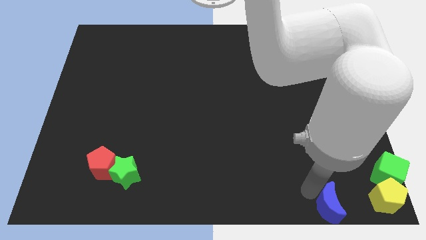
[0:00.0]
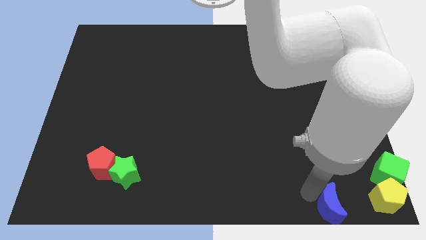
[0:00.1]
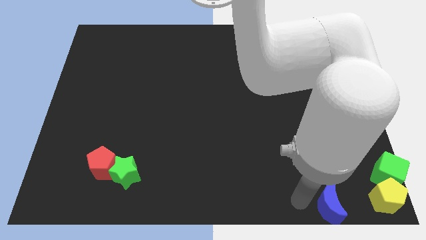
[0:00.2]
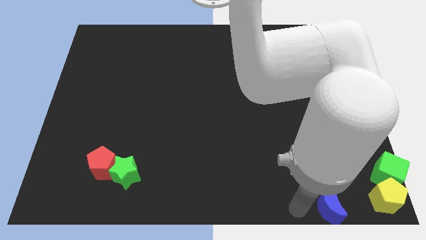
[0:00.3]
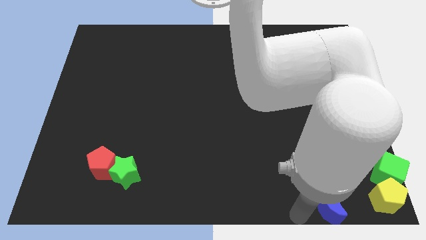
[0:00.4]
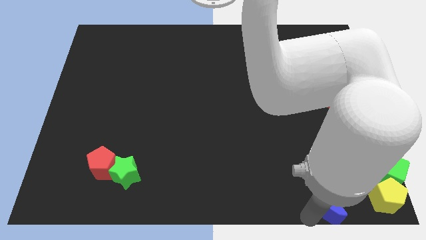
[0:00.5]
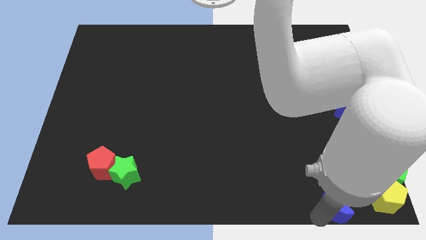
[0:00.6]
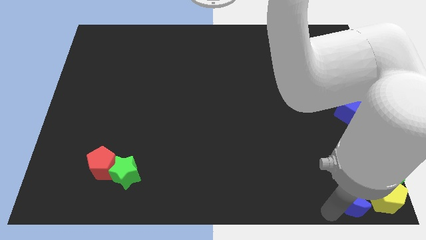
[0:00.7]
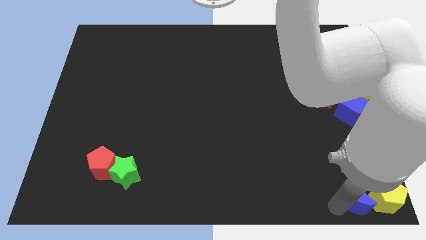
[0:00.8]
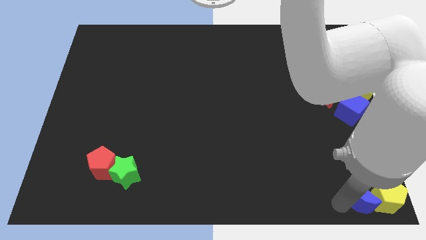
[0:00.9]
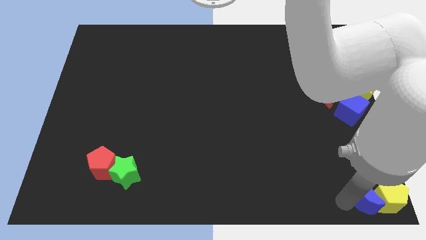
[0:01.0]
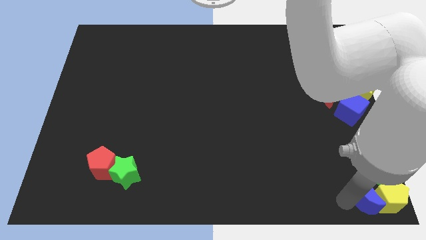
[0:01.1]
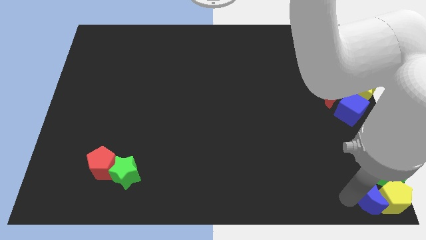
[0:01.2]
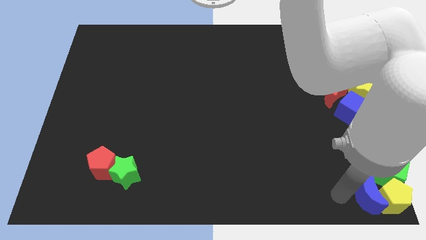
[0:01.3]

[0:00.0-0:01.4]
move the blue crescent into the yellow pentagon

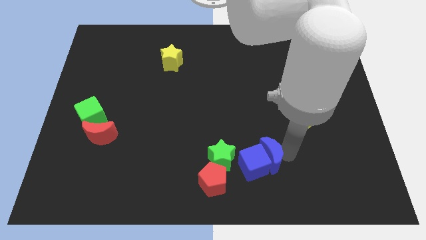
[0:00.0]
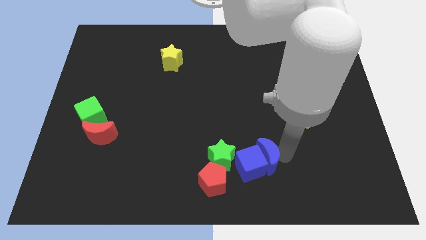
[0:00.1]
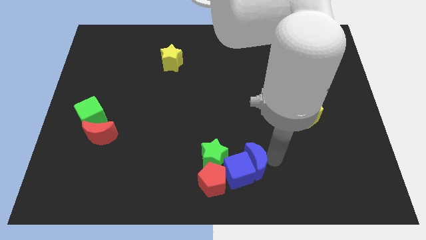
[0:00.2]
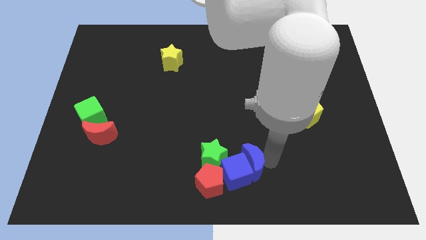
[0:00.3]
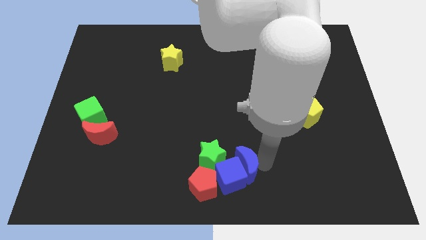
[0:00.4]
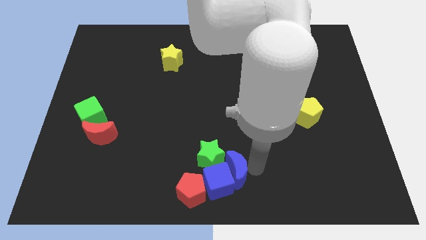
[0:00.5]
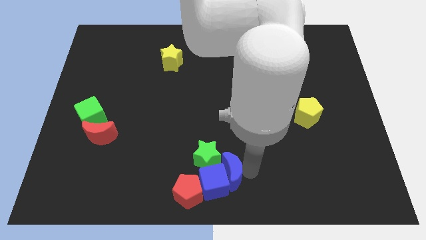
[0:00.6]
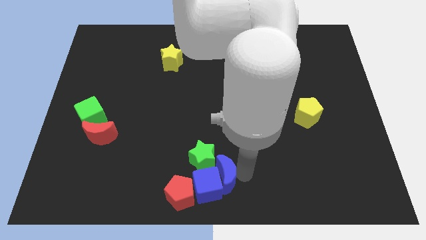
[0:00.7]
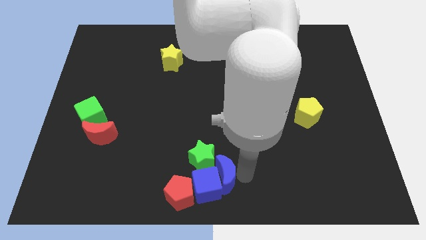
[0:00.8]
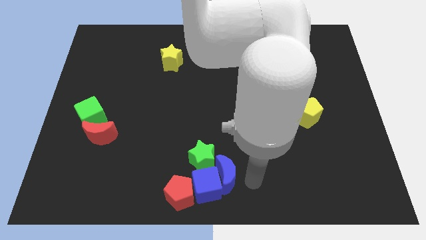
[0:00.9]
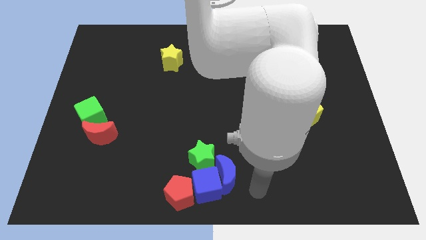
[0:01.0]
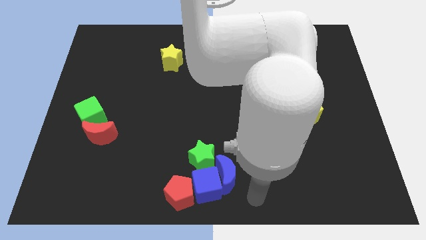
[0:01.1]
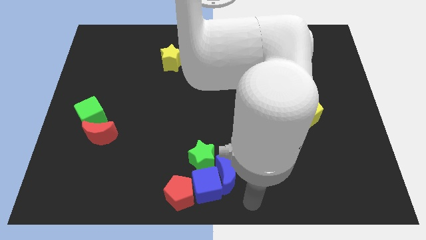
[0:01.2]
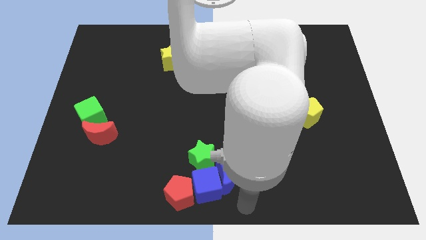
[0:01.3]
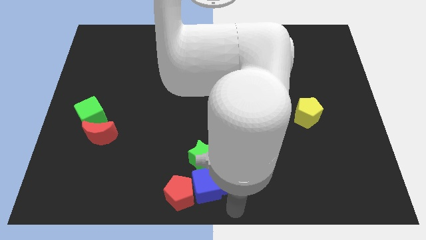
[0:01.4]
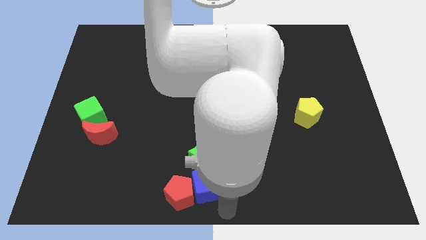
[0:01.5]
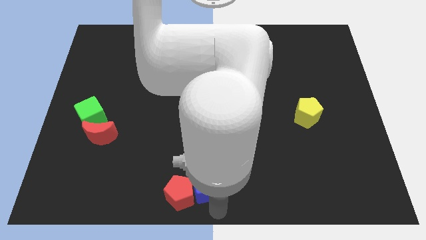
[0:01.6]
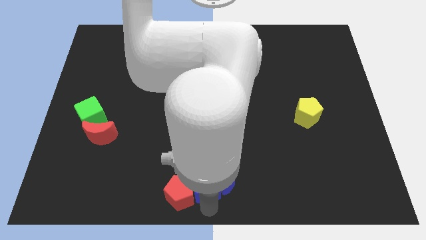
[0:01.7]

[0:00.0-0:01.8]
push the blue cube and blue crescent into the red pentagon

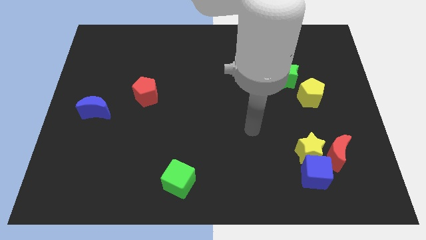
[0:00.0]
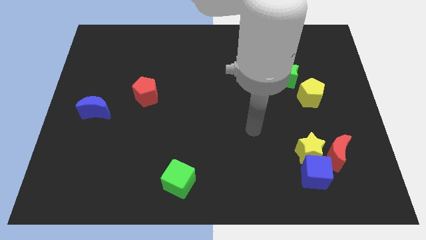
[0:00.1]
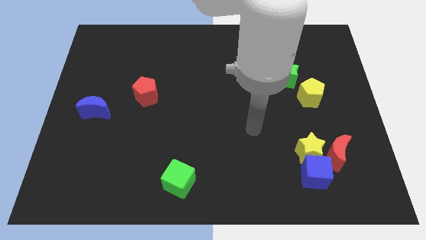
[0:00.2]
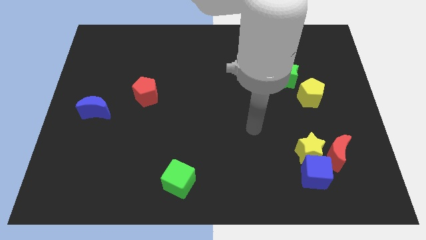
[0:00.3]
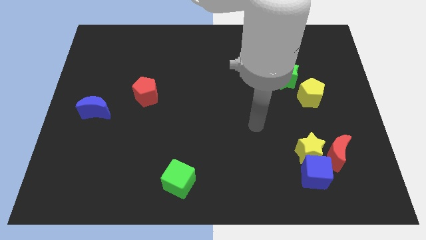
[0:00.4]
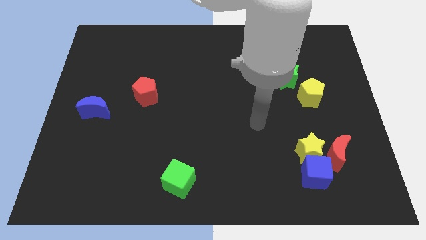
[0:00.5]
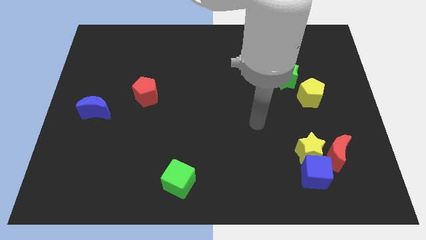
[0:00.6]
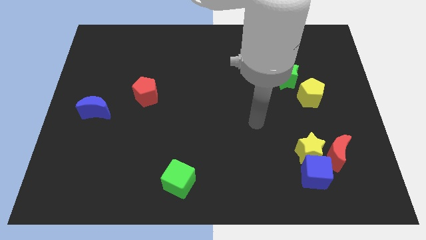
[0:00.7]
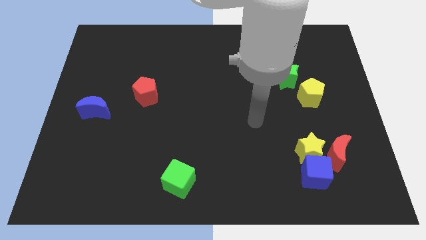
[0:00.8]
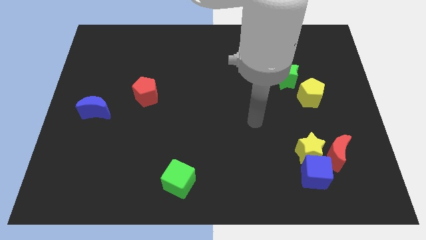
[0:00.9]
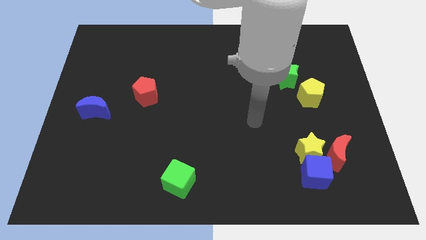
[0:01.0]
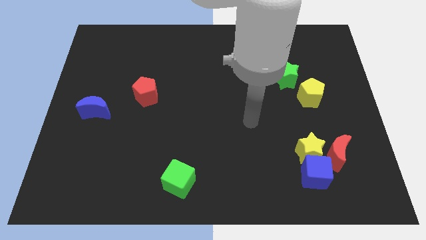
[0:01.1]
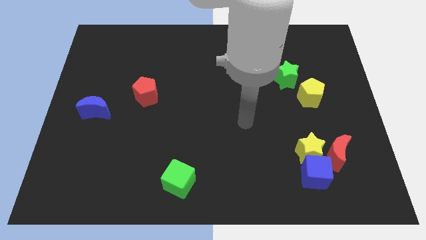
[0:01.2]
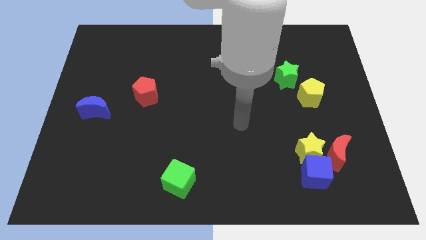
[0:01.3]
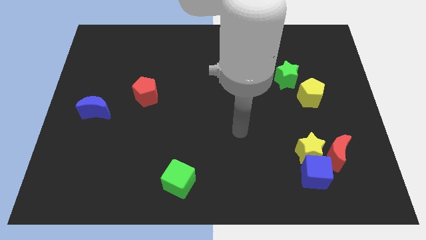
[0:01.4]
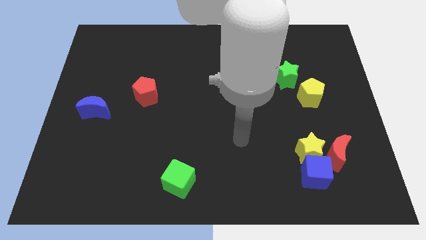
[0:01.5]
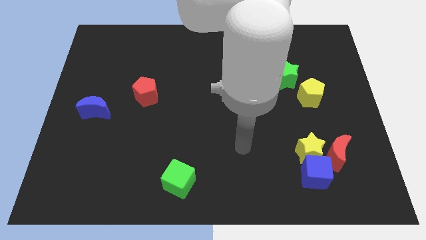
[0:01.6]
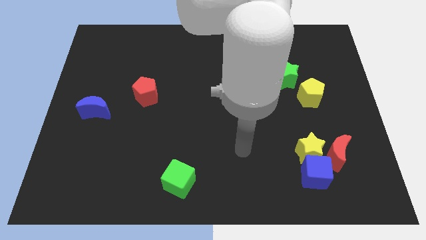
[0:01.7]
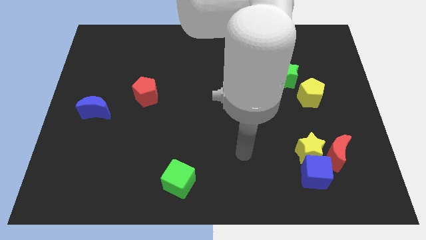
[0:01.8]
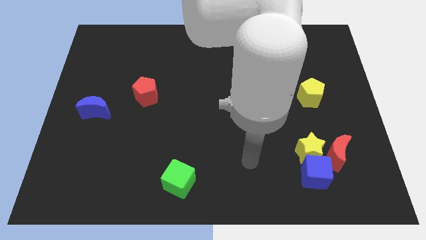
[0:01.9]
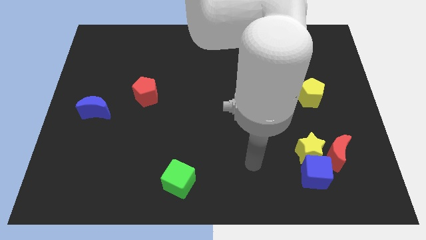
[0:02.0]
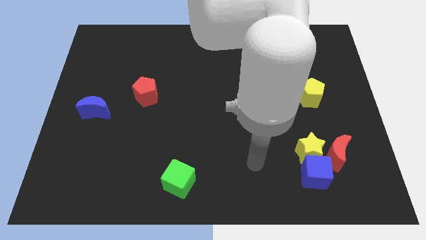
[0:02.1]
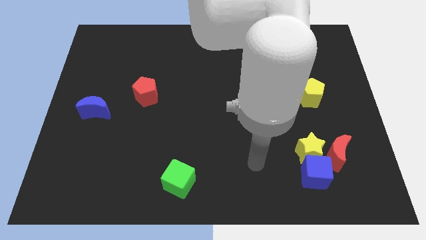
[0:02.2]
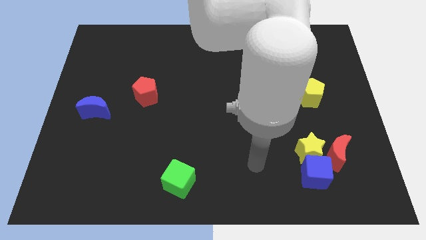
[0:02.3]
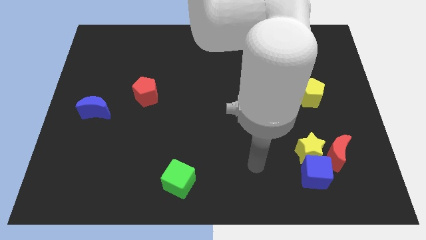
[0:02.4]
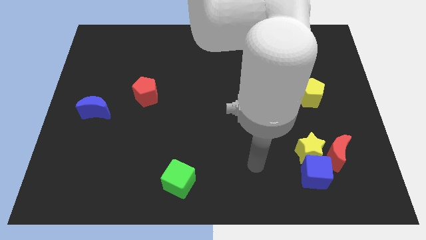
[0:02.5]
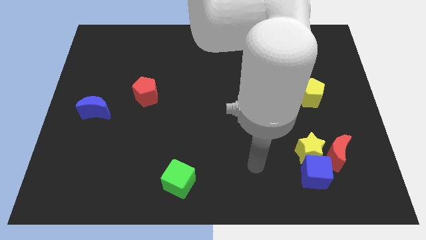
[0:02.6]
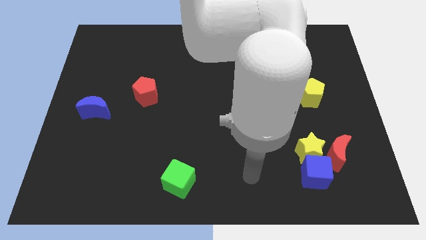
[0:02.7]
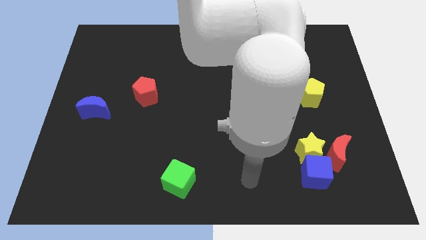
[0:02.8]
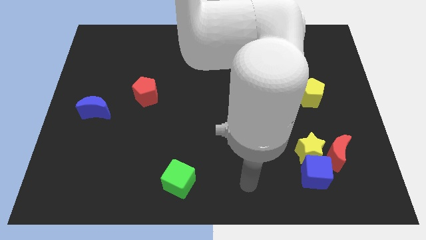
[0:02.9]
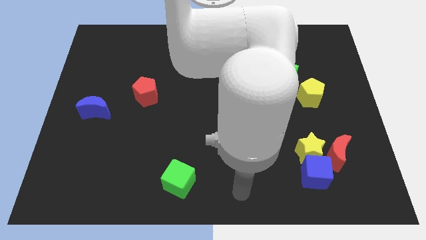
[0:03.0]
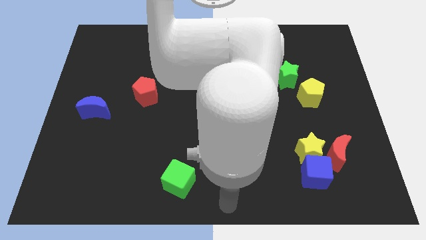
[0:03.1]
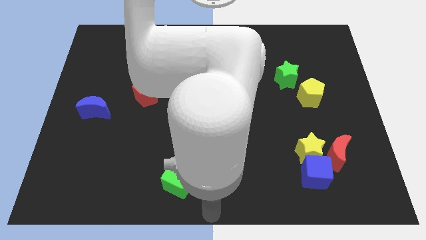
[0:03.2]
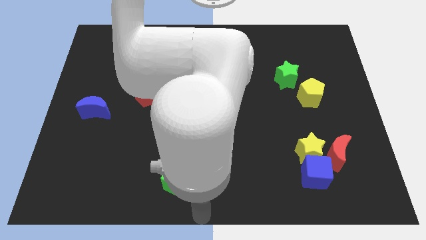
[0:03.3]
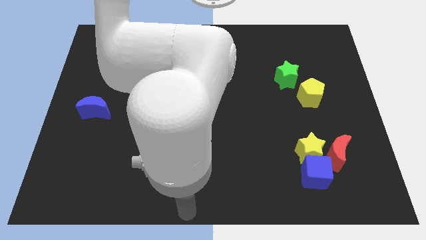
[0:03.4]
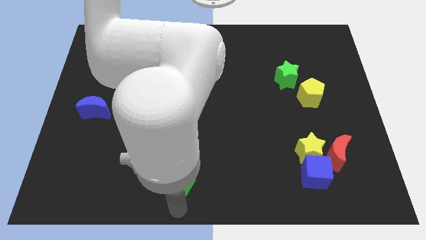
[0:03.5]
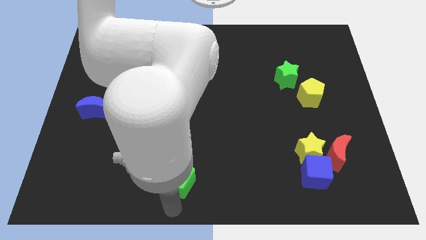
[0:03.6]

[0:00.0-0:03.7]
move your arm to the bottom of the green cube

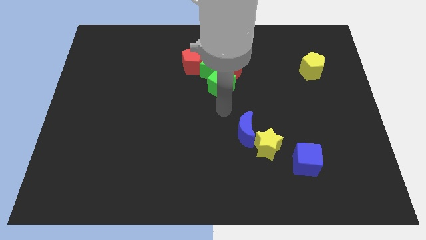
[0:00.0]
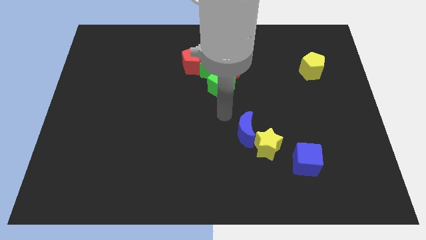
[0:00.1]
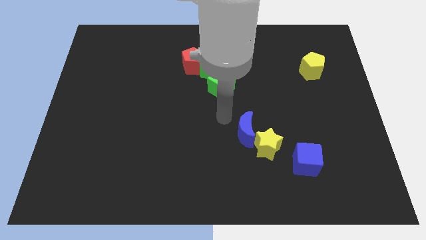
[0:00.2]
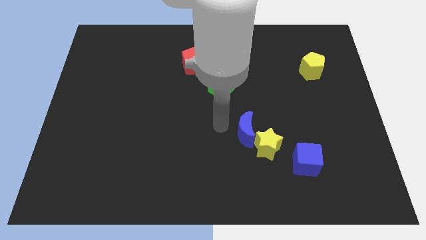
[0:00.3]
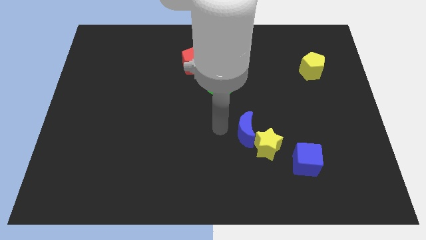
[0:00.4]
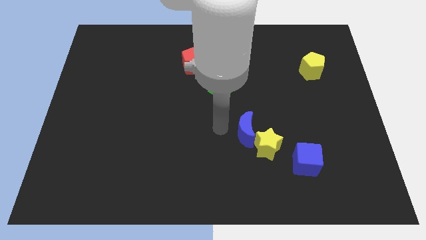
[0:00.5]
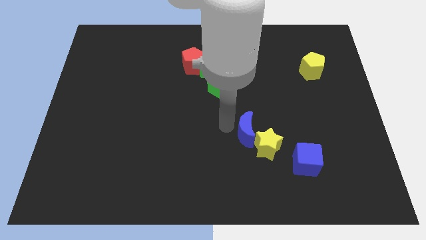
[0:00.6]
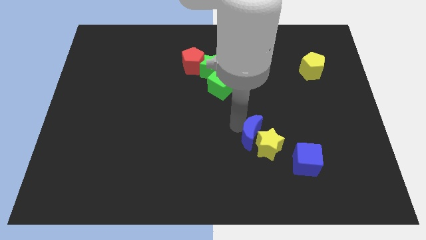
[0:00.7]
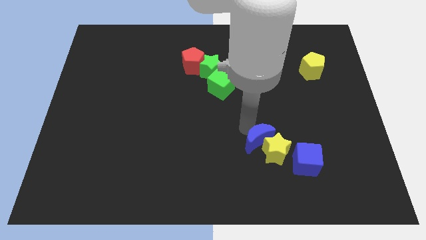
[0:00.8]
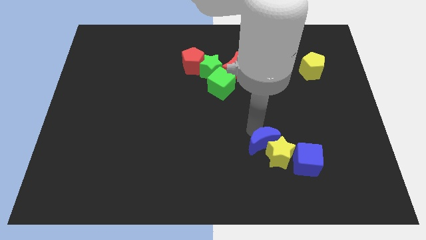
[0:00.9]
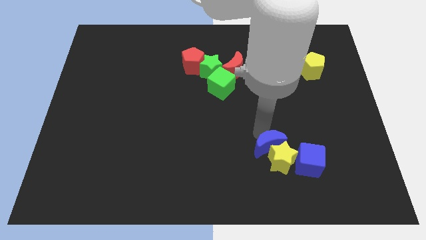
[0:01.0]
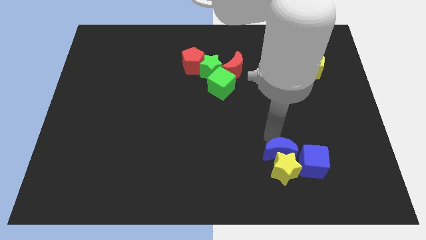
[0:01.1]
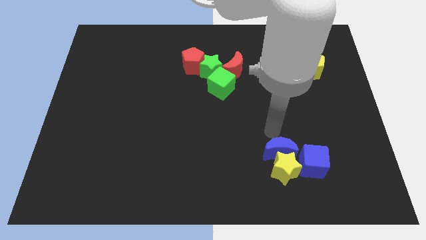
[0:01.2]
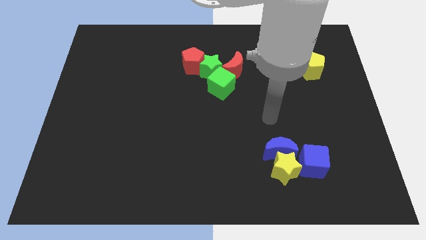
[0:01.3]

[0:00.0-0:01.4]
move blue moon along with yellow star into the blue cube

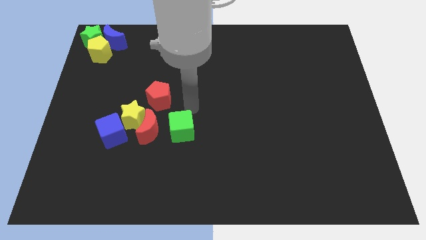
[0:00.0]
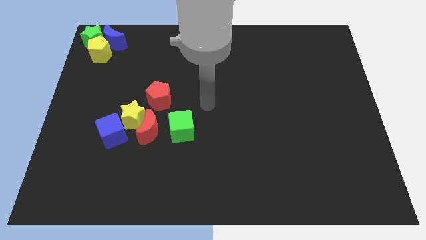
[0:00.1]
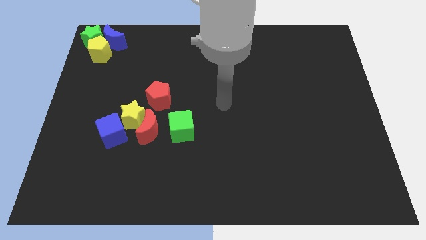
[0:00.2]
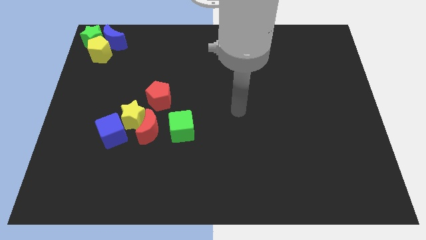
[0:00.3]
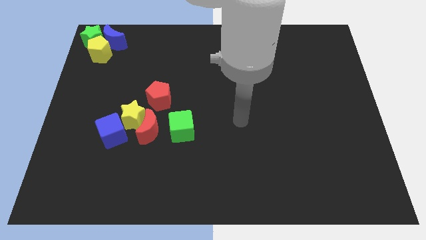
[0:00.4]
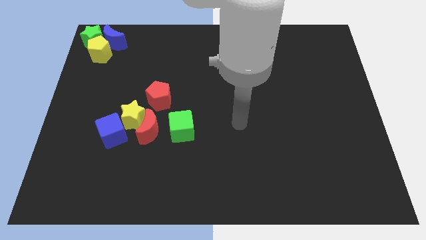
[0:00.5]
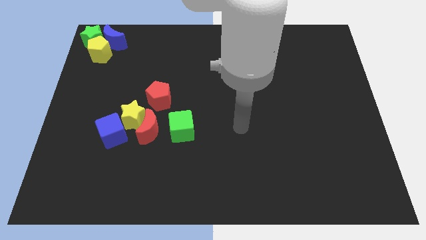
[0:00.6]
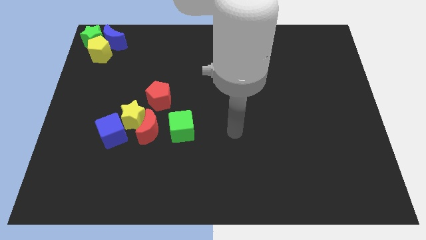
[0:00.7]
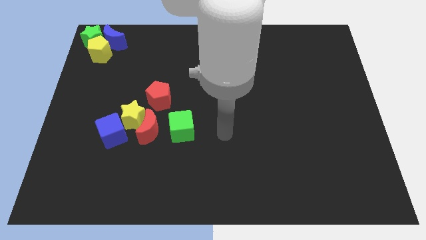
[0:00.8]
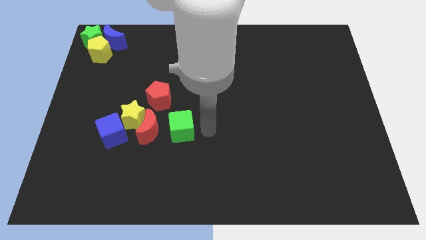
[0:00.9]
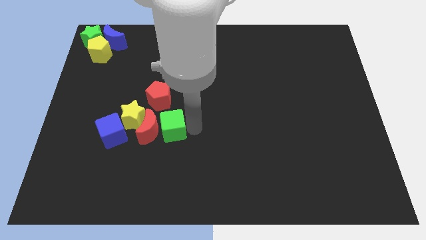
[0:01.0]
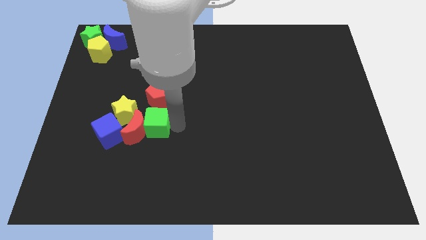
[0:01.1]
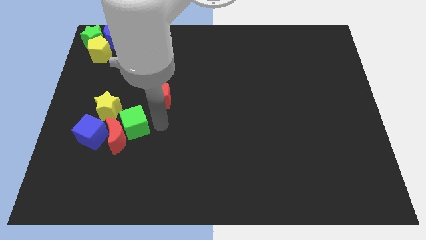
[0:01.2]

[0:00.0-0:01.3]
push the green cube into the red crescent
